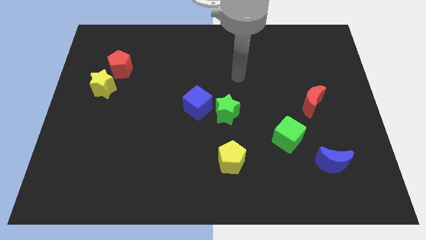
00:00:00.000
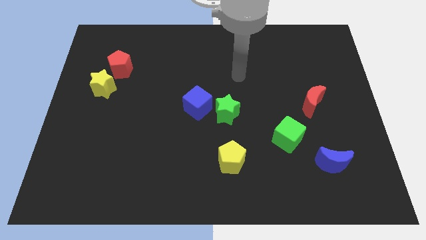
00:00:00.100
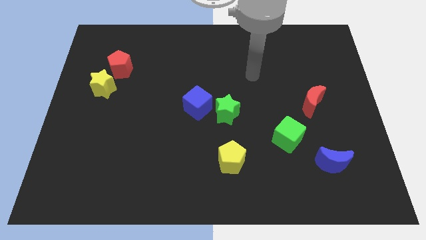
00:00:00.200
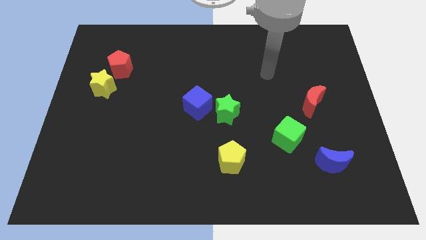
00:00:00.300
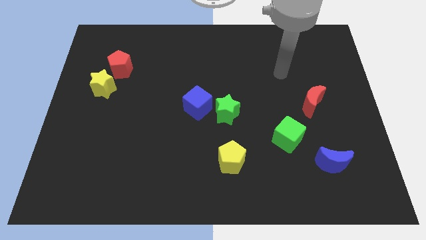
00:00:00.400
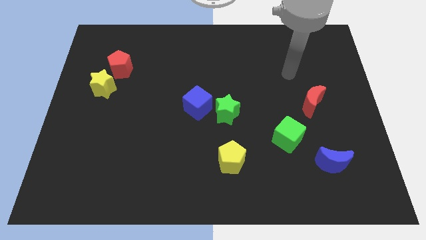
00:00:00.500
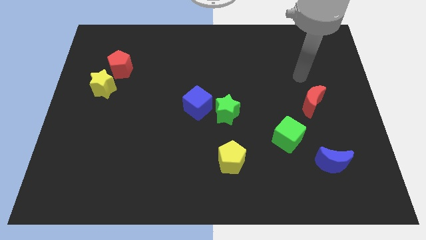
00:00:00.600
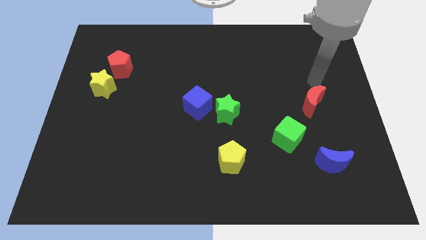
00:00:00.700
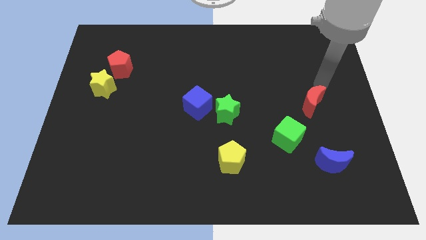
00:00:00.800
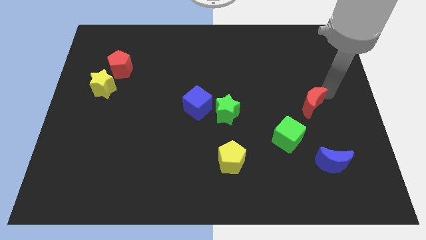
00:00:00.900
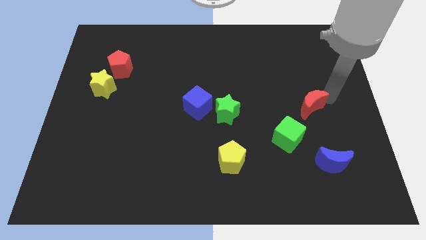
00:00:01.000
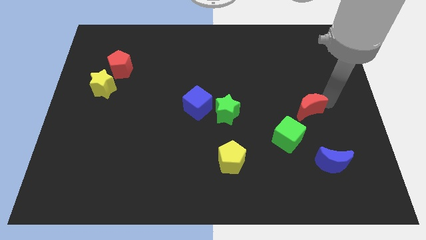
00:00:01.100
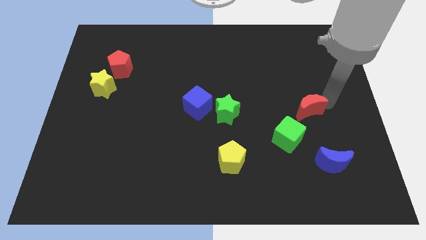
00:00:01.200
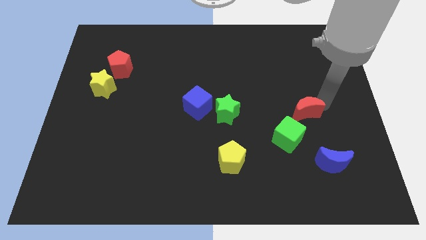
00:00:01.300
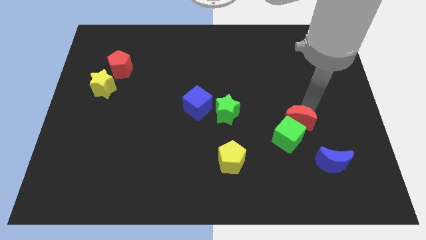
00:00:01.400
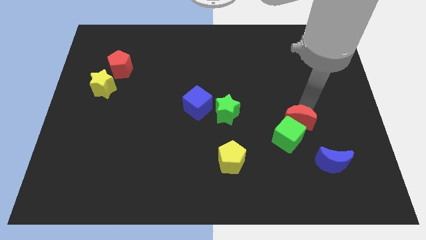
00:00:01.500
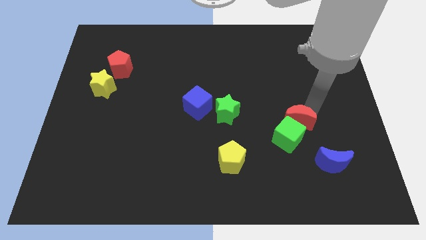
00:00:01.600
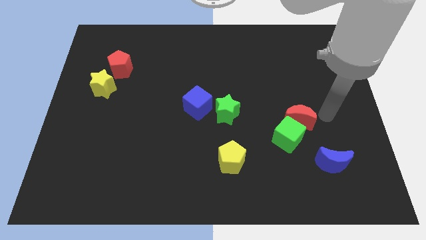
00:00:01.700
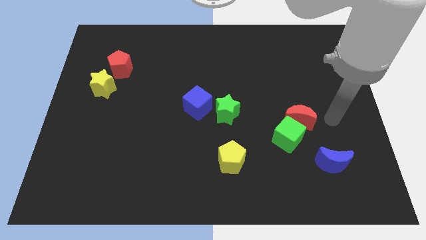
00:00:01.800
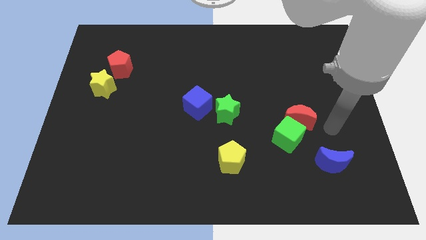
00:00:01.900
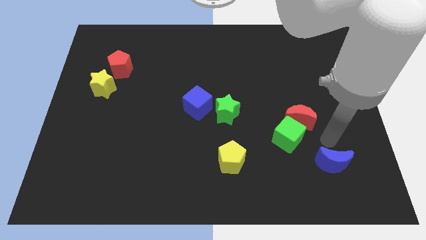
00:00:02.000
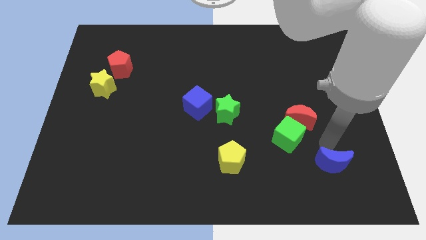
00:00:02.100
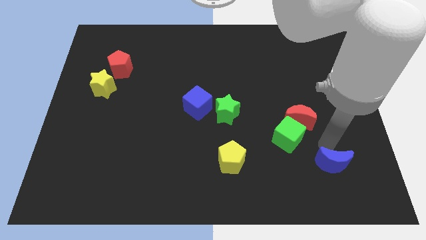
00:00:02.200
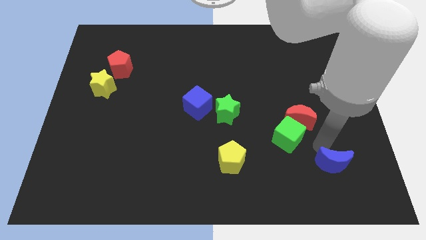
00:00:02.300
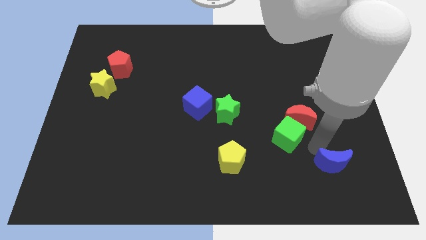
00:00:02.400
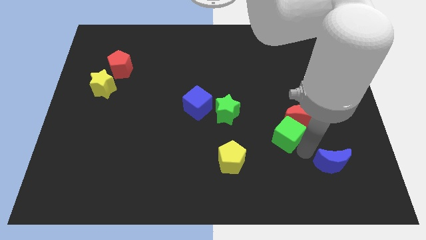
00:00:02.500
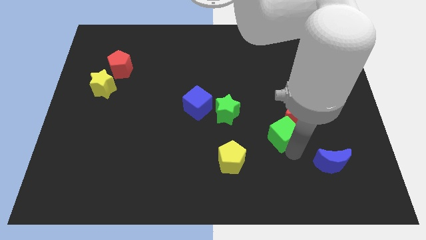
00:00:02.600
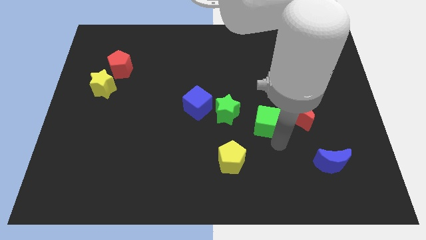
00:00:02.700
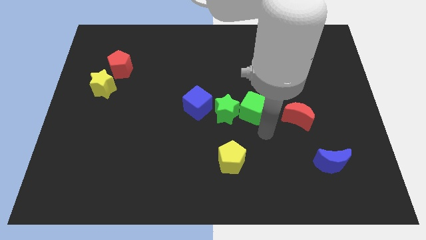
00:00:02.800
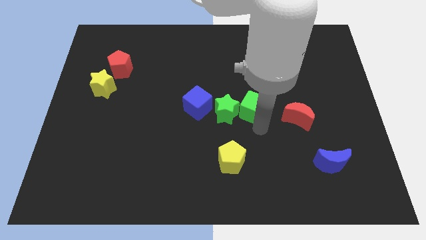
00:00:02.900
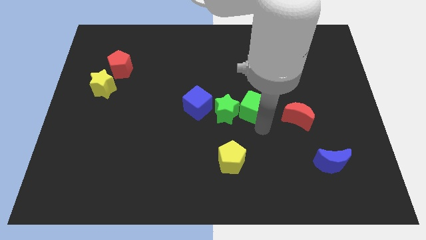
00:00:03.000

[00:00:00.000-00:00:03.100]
push the green cube into the green star

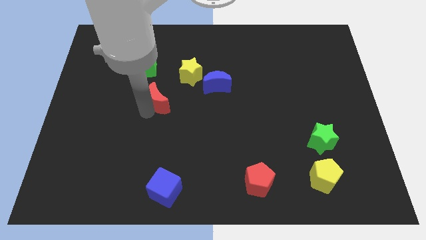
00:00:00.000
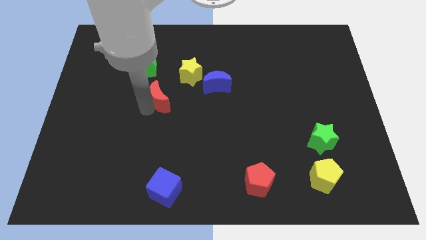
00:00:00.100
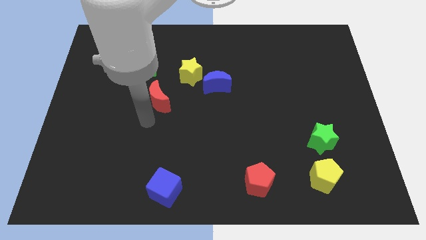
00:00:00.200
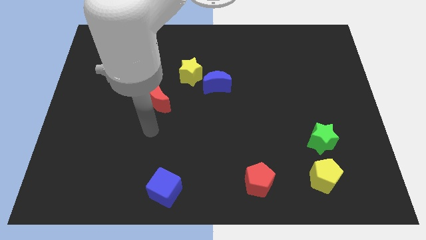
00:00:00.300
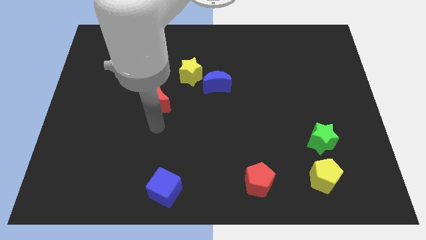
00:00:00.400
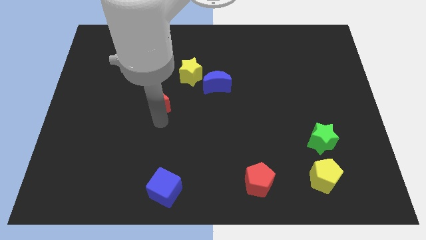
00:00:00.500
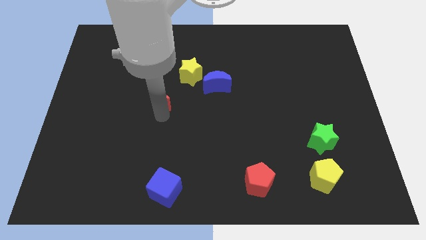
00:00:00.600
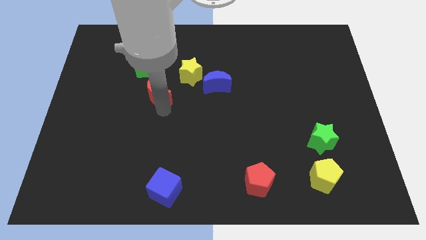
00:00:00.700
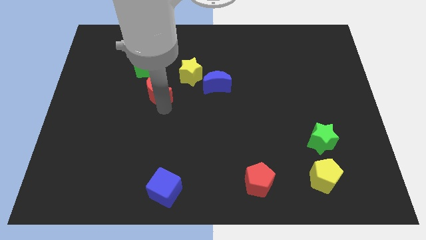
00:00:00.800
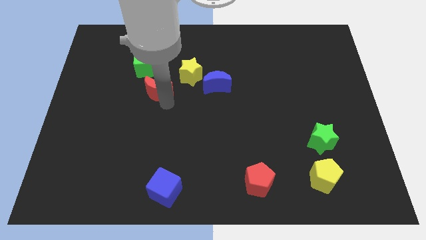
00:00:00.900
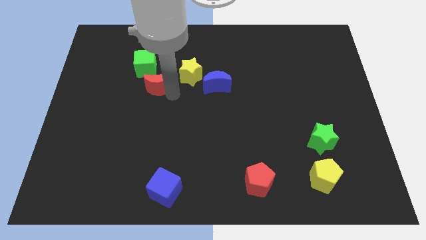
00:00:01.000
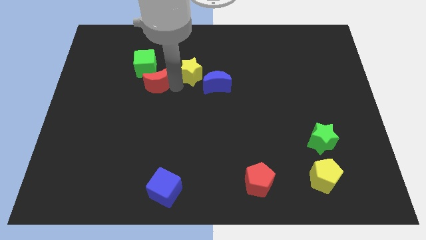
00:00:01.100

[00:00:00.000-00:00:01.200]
move the red moon to the left bottom of the yellow star

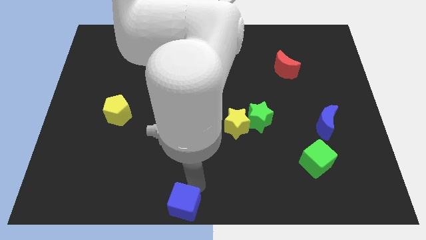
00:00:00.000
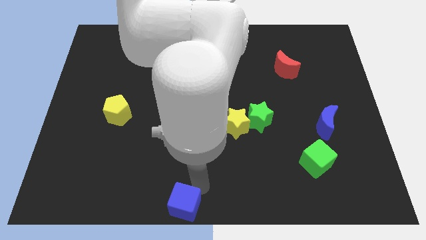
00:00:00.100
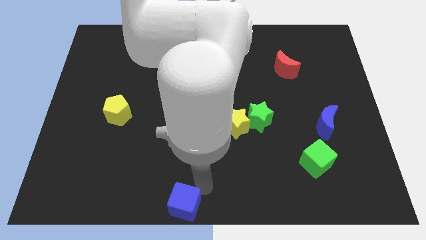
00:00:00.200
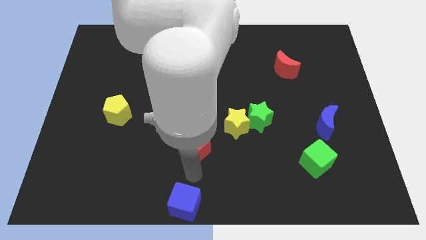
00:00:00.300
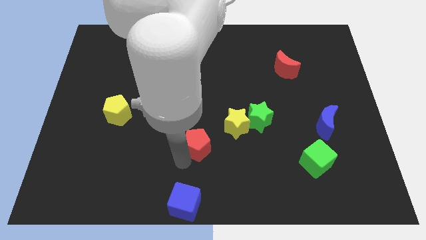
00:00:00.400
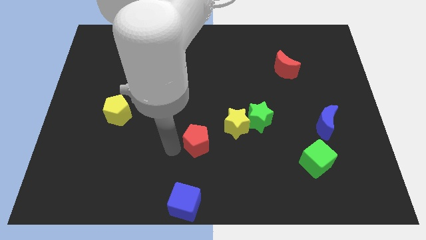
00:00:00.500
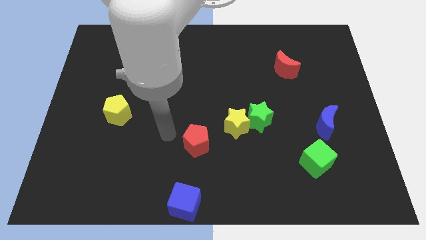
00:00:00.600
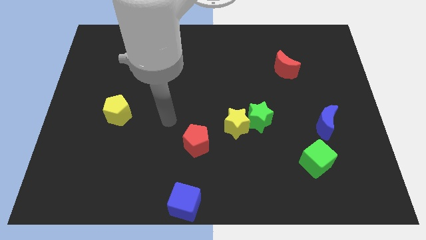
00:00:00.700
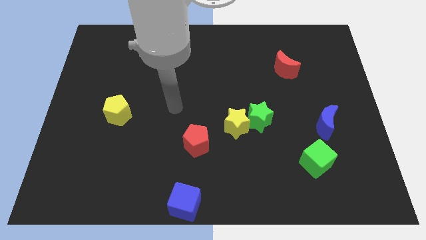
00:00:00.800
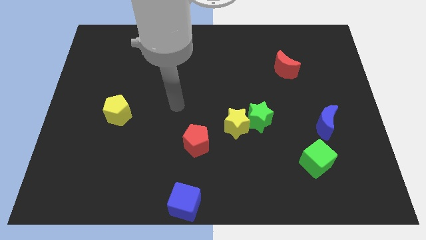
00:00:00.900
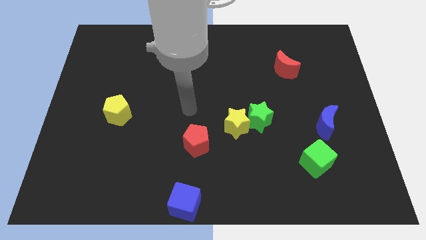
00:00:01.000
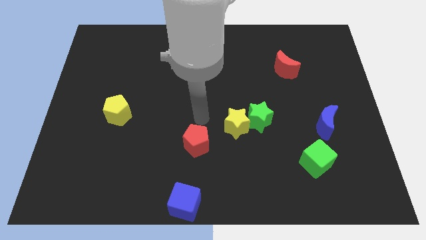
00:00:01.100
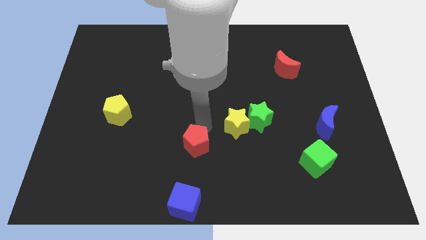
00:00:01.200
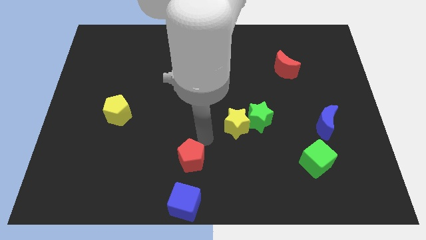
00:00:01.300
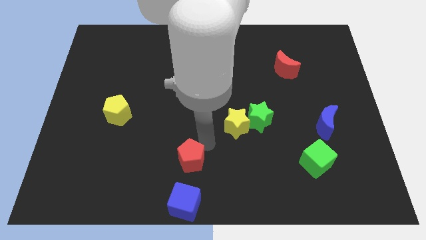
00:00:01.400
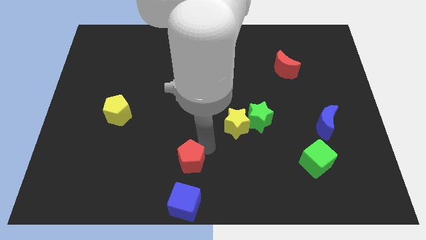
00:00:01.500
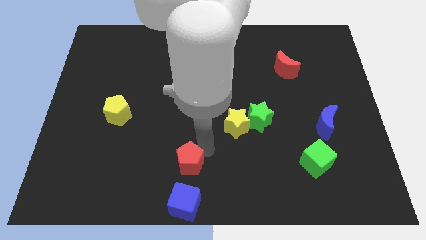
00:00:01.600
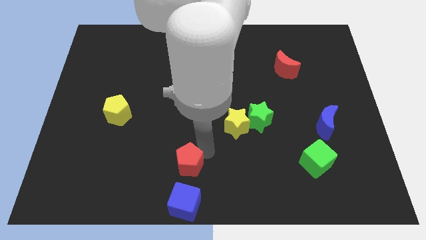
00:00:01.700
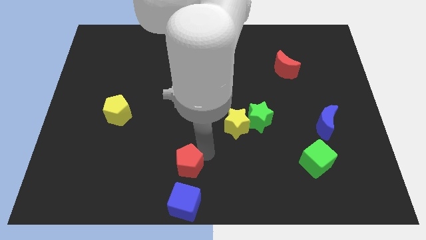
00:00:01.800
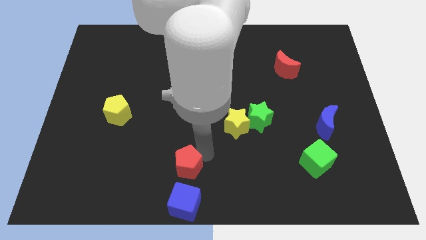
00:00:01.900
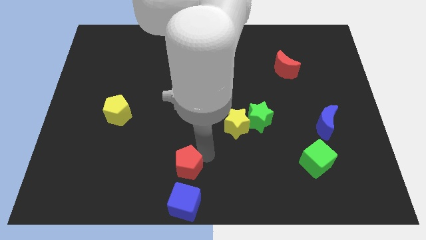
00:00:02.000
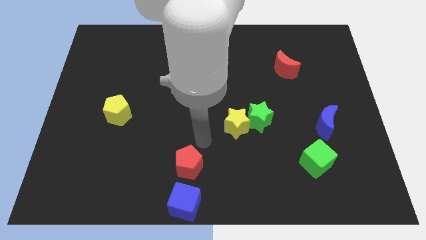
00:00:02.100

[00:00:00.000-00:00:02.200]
push red pentagon towards the blue cube

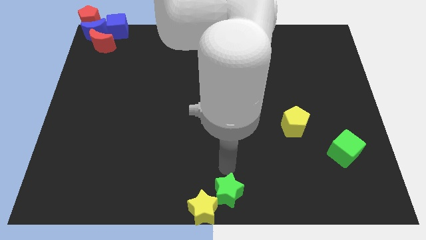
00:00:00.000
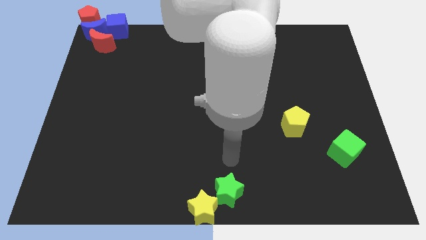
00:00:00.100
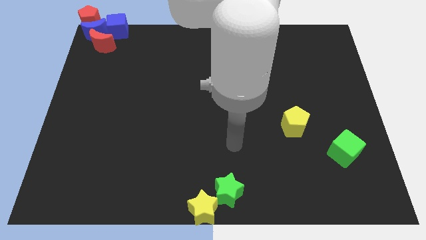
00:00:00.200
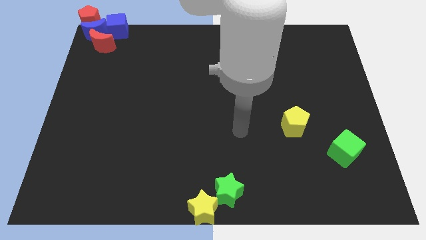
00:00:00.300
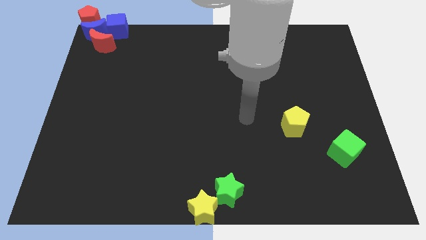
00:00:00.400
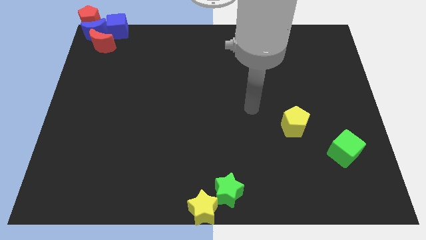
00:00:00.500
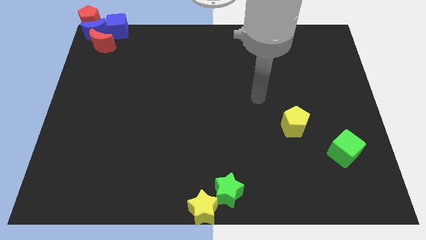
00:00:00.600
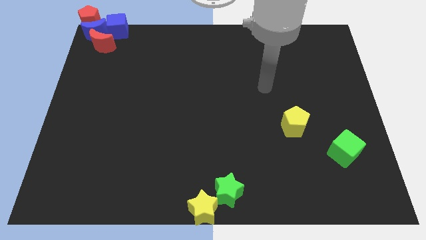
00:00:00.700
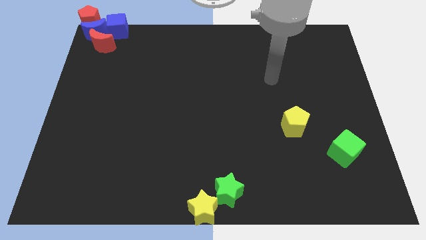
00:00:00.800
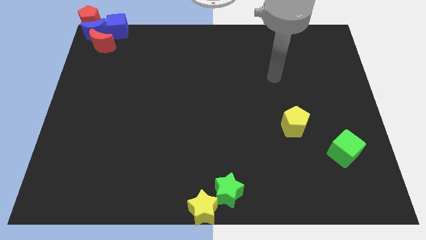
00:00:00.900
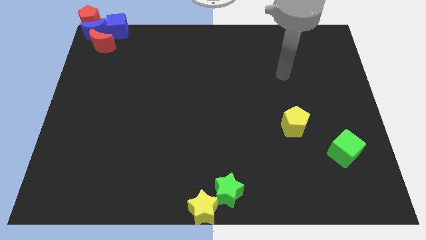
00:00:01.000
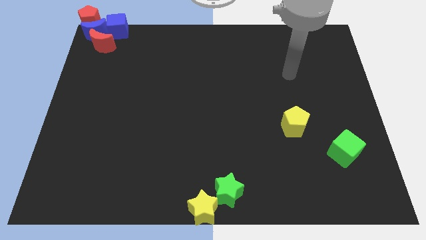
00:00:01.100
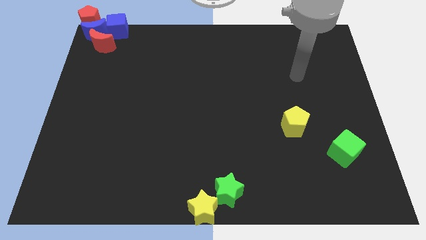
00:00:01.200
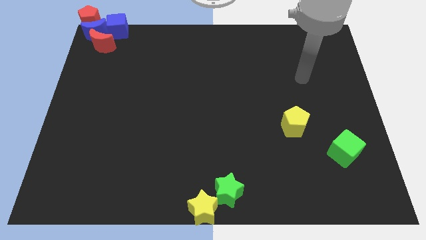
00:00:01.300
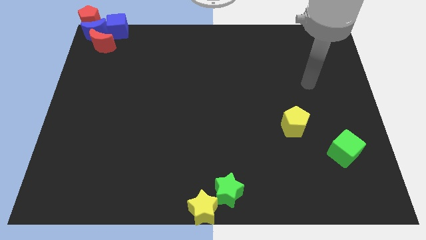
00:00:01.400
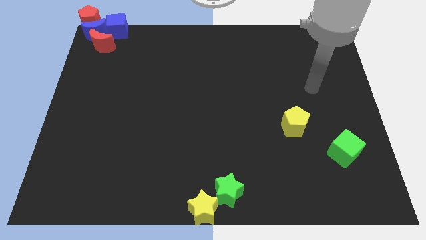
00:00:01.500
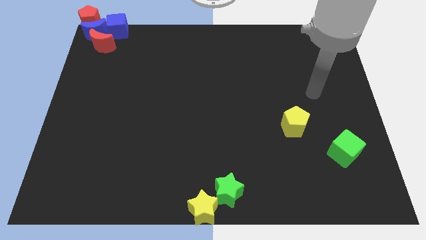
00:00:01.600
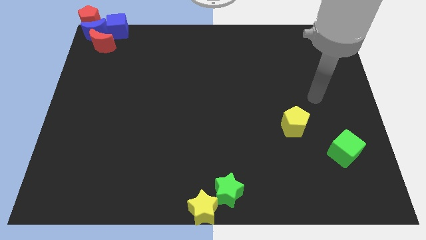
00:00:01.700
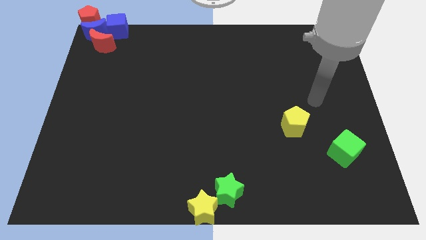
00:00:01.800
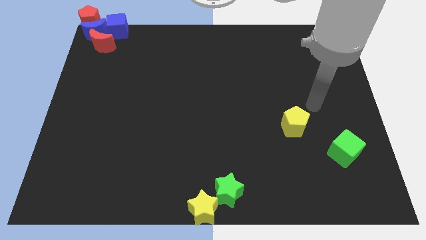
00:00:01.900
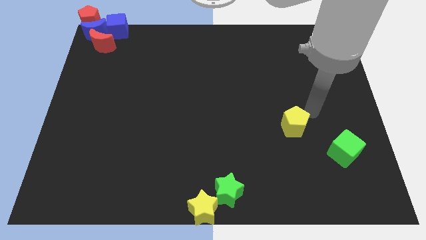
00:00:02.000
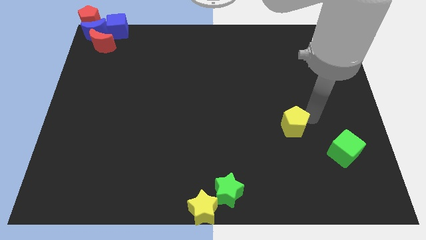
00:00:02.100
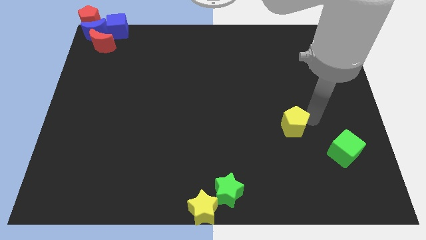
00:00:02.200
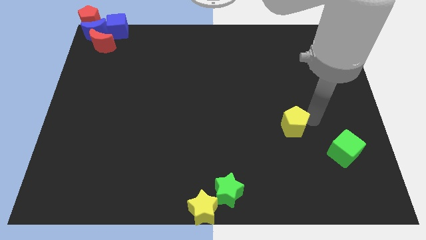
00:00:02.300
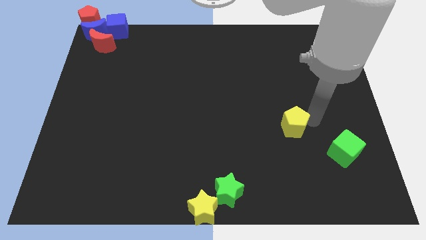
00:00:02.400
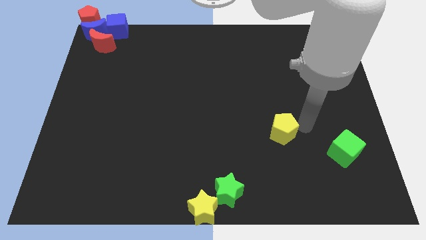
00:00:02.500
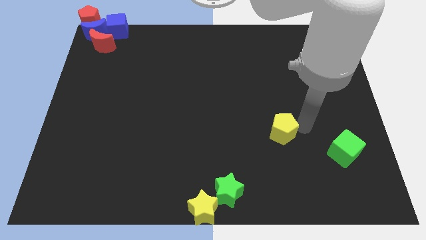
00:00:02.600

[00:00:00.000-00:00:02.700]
move yellow pentagon slightly to the center
